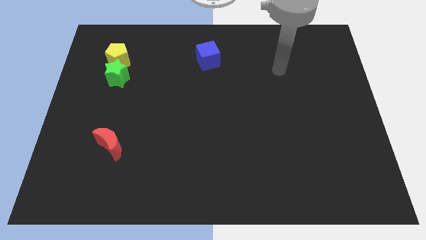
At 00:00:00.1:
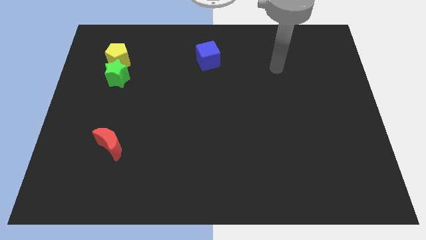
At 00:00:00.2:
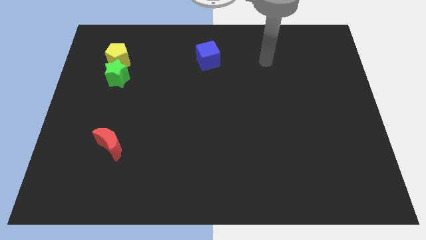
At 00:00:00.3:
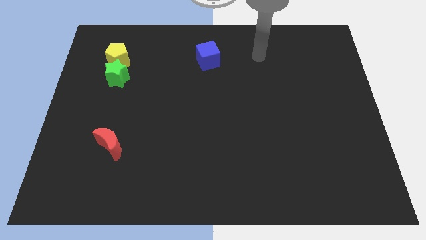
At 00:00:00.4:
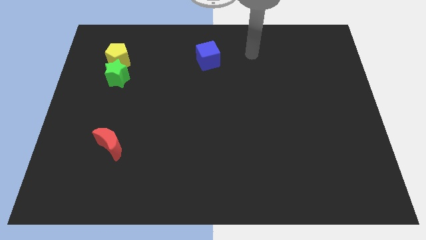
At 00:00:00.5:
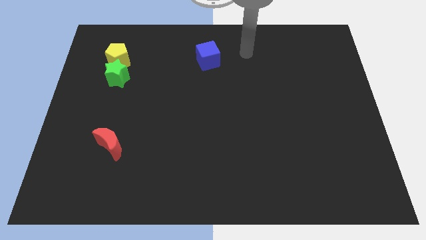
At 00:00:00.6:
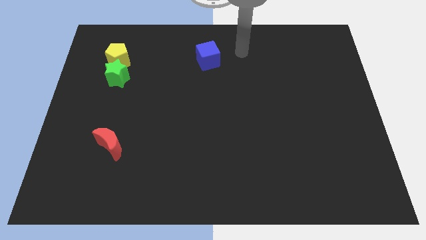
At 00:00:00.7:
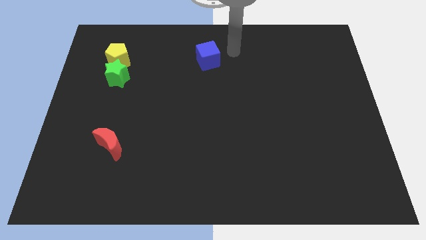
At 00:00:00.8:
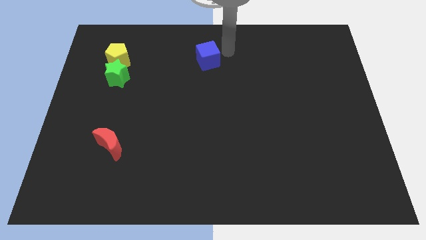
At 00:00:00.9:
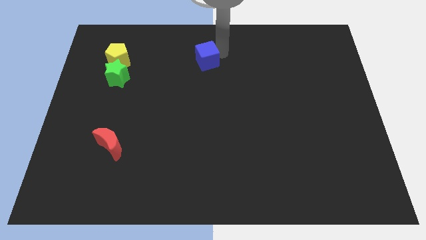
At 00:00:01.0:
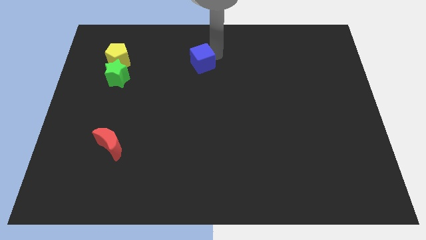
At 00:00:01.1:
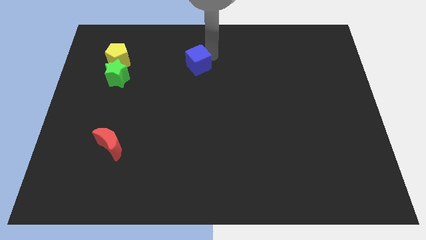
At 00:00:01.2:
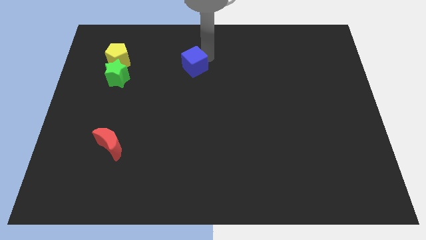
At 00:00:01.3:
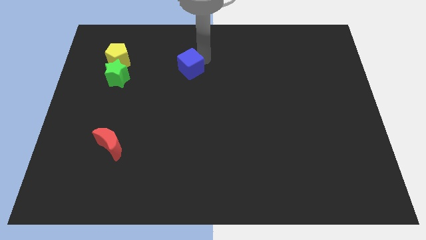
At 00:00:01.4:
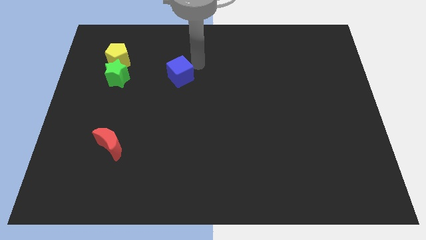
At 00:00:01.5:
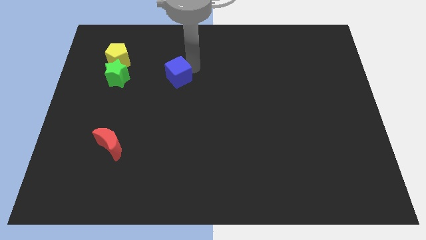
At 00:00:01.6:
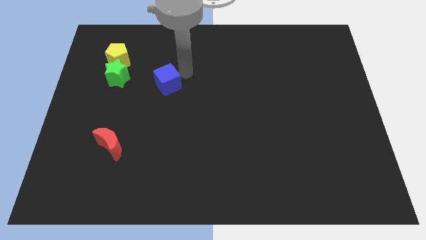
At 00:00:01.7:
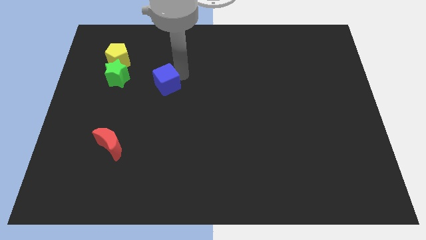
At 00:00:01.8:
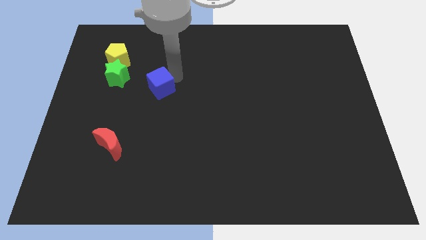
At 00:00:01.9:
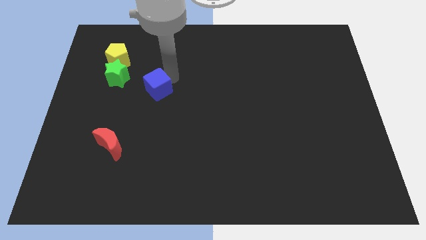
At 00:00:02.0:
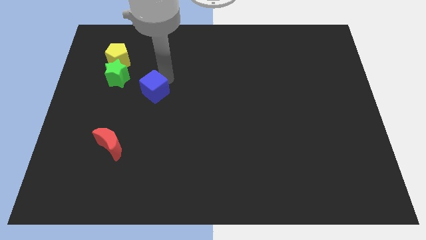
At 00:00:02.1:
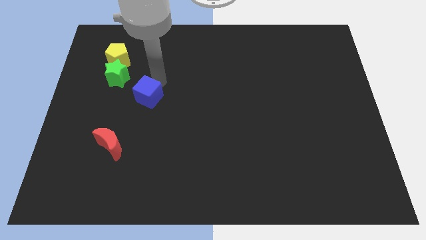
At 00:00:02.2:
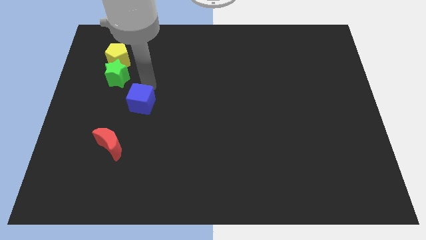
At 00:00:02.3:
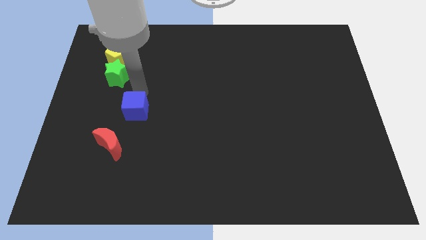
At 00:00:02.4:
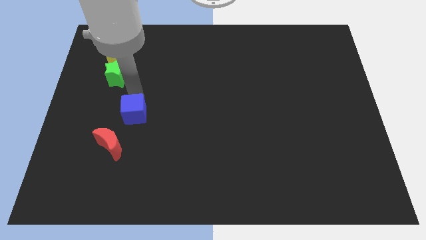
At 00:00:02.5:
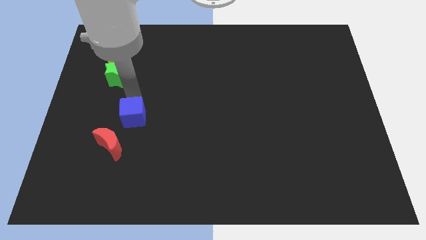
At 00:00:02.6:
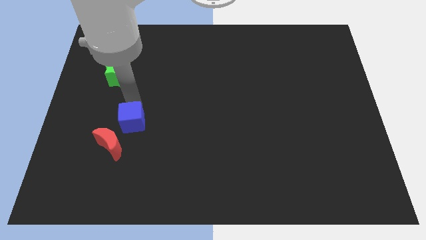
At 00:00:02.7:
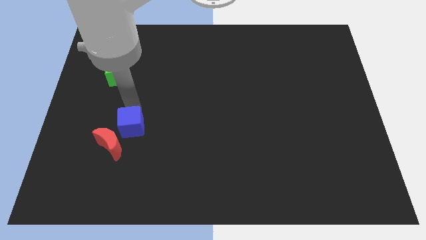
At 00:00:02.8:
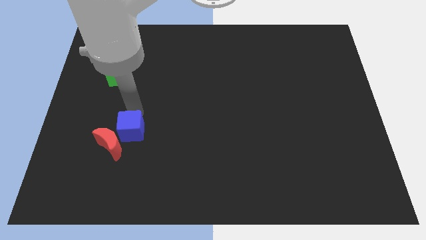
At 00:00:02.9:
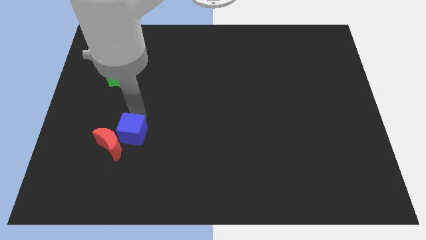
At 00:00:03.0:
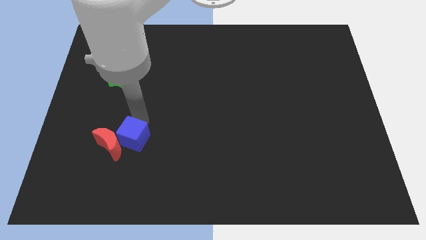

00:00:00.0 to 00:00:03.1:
push the blue block close to the red block

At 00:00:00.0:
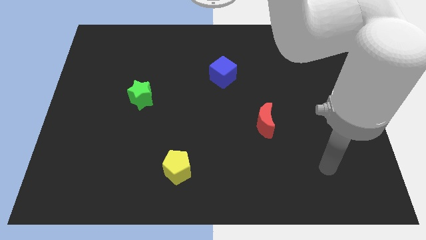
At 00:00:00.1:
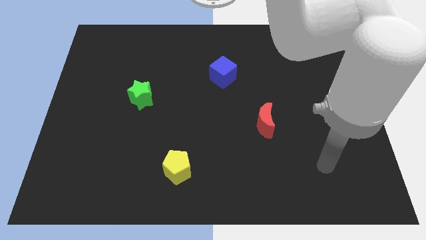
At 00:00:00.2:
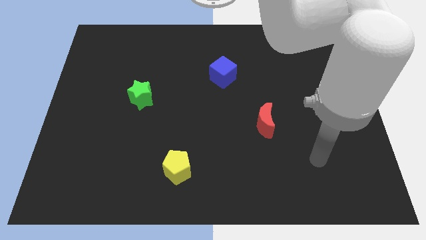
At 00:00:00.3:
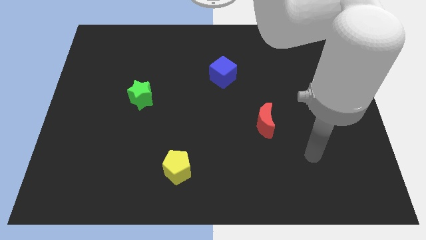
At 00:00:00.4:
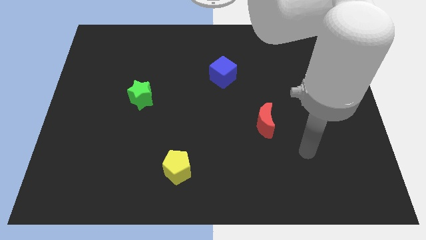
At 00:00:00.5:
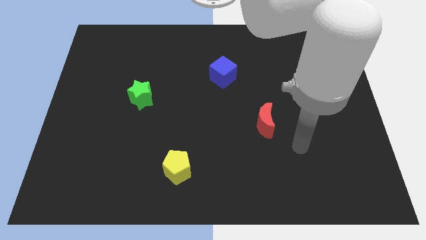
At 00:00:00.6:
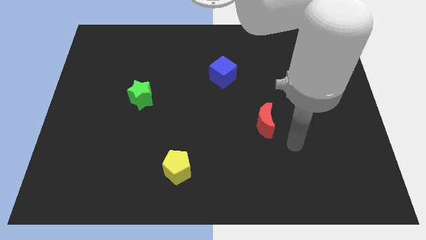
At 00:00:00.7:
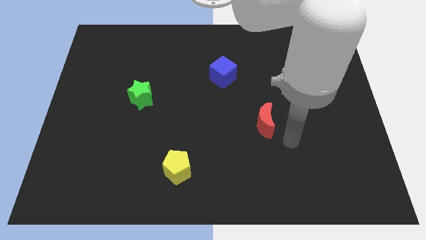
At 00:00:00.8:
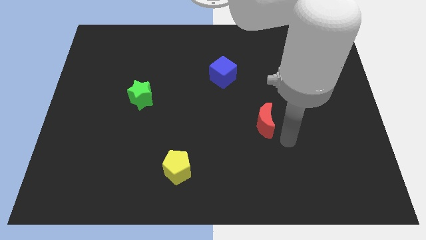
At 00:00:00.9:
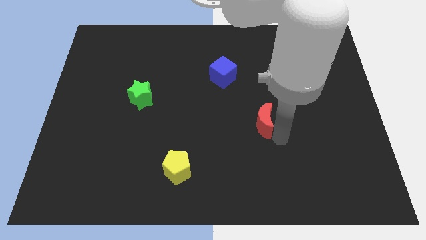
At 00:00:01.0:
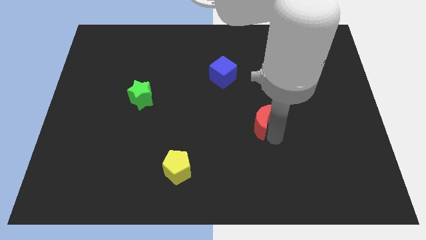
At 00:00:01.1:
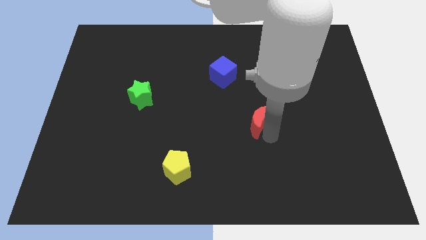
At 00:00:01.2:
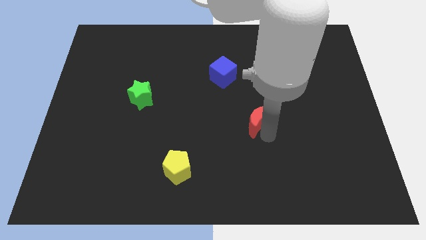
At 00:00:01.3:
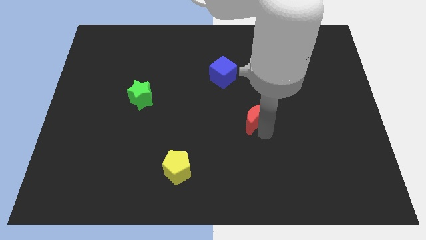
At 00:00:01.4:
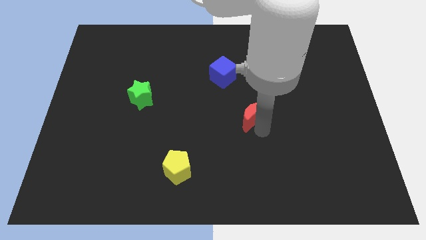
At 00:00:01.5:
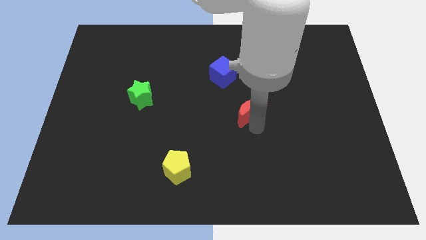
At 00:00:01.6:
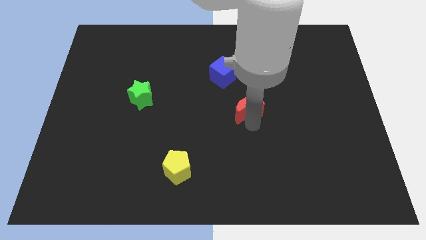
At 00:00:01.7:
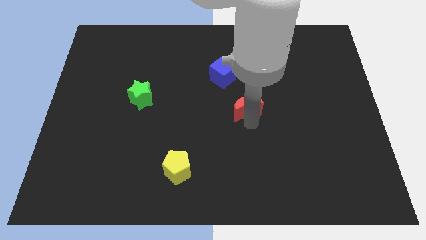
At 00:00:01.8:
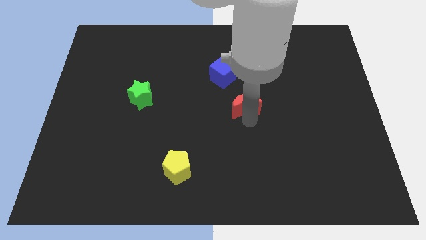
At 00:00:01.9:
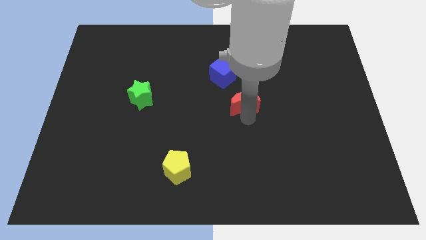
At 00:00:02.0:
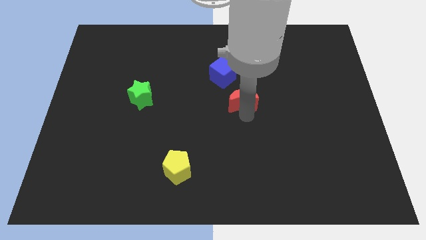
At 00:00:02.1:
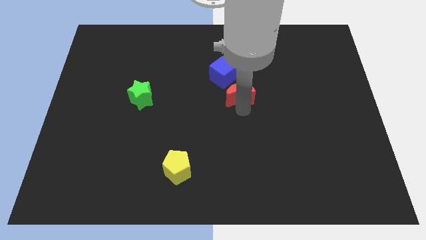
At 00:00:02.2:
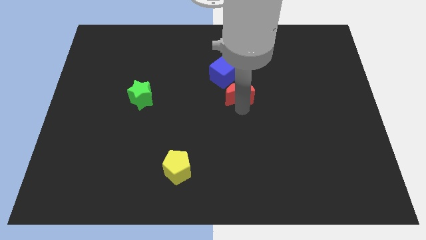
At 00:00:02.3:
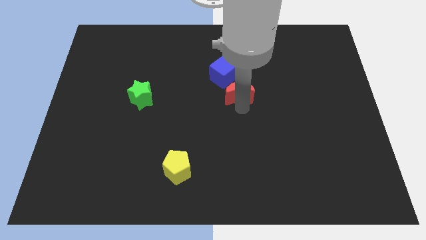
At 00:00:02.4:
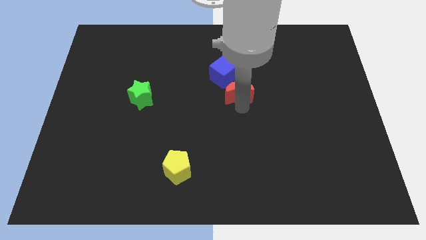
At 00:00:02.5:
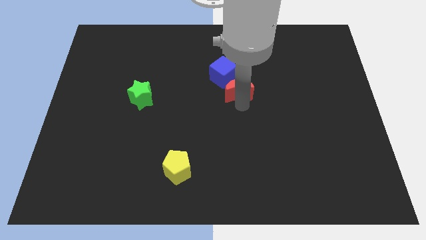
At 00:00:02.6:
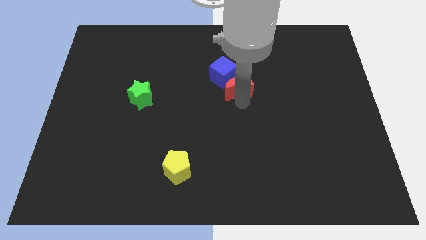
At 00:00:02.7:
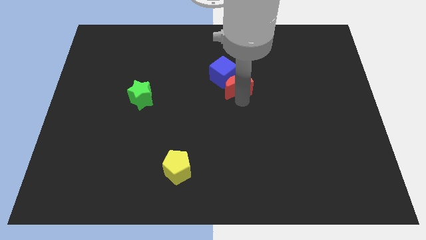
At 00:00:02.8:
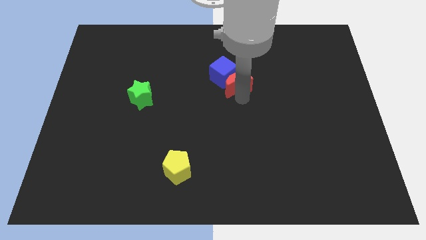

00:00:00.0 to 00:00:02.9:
move the red block to the blue cube

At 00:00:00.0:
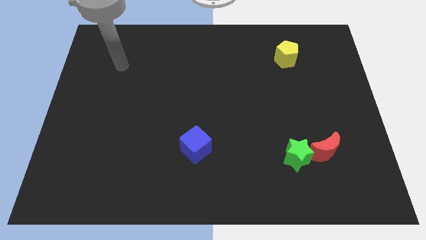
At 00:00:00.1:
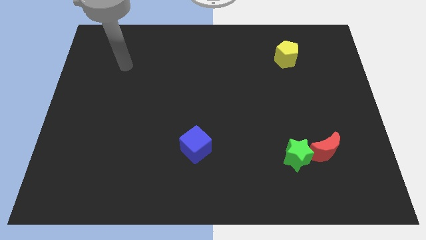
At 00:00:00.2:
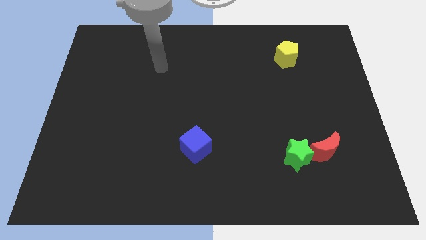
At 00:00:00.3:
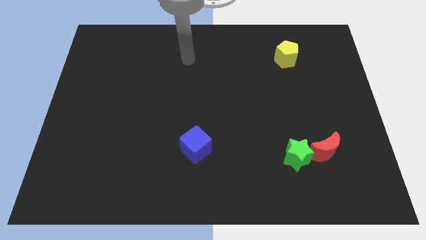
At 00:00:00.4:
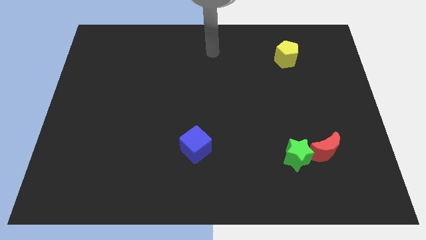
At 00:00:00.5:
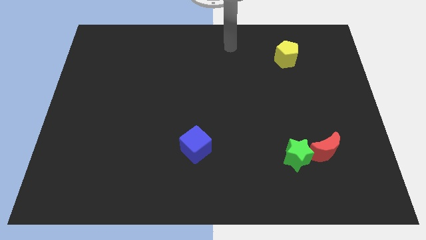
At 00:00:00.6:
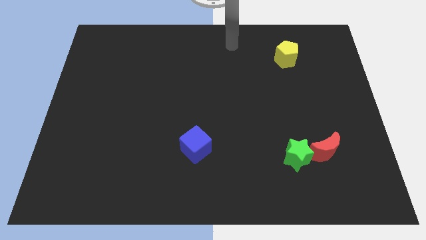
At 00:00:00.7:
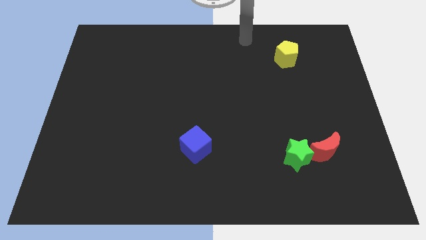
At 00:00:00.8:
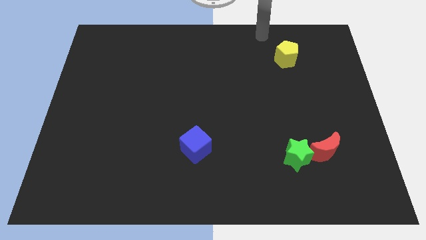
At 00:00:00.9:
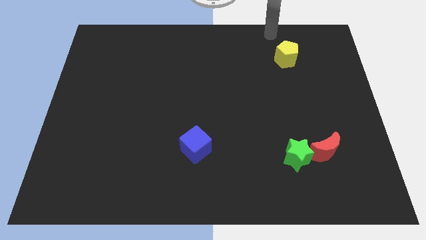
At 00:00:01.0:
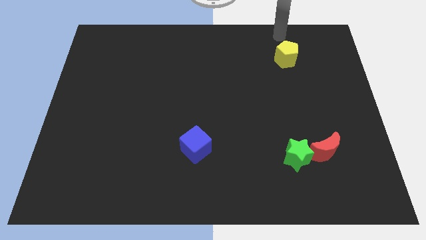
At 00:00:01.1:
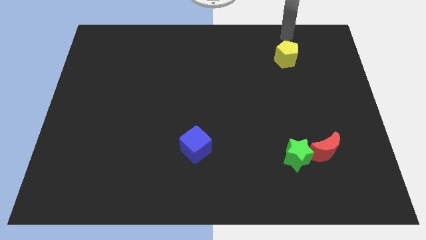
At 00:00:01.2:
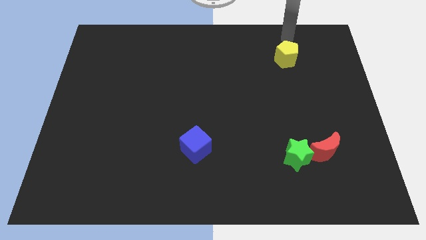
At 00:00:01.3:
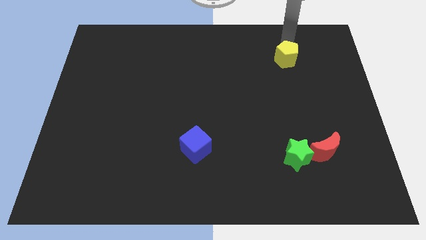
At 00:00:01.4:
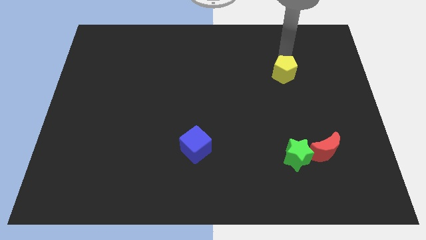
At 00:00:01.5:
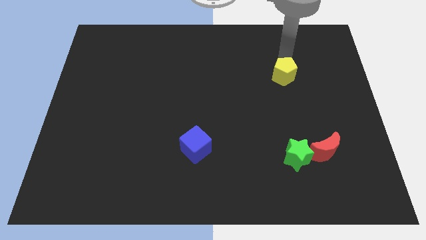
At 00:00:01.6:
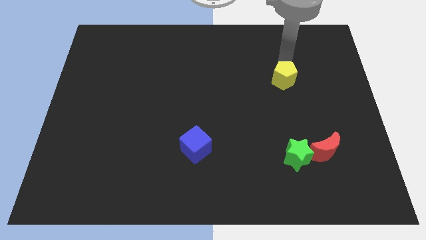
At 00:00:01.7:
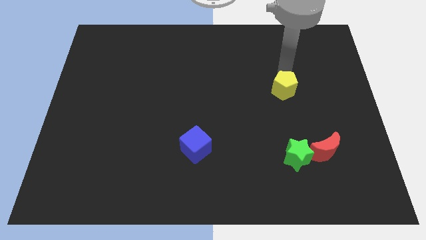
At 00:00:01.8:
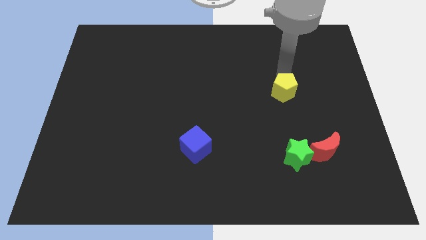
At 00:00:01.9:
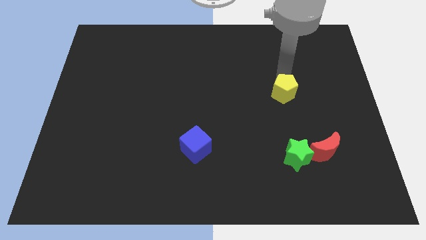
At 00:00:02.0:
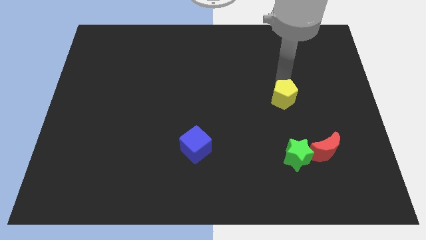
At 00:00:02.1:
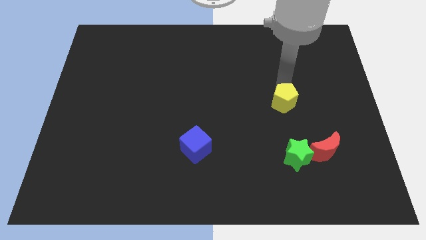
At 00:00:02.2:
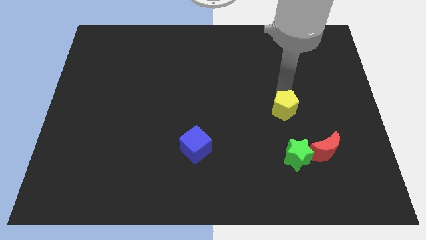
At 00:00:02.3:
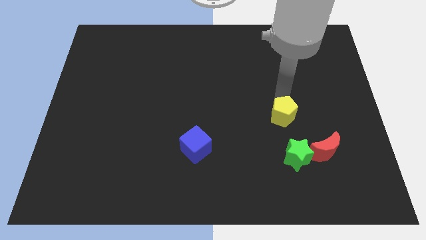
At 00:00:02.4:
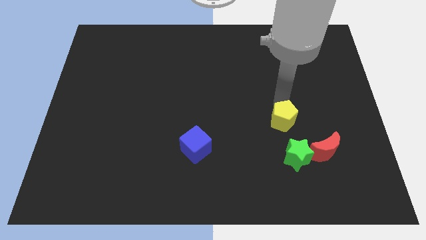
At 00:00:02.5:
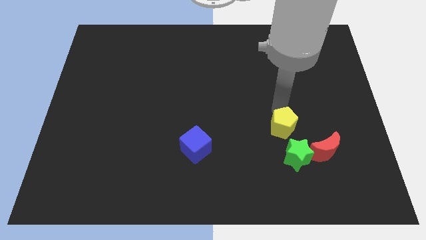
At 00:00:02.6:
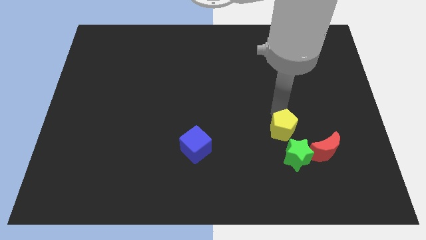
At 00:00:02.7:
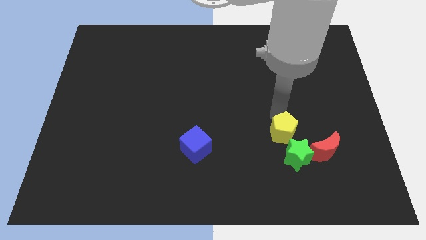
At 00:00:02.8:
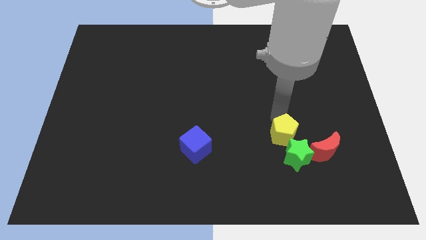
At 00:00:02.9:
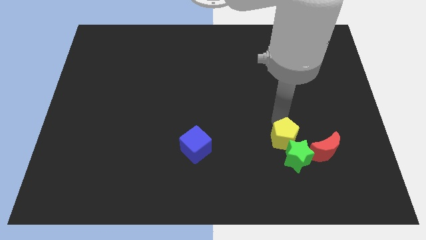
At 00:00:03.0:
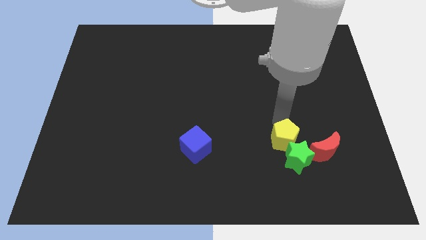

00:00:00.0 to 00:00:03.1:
push the yellow block next to the green star
